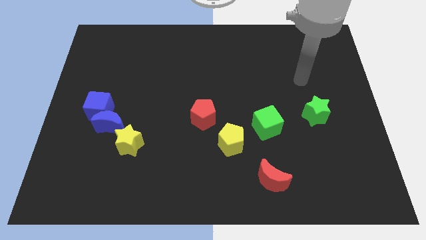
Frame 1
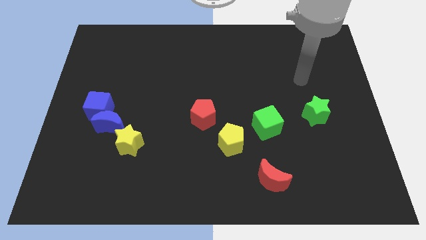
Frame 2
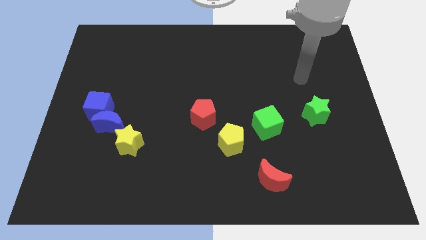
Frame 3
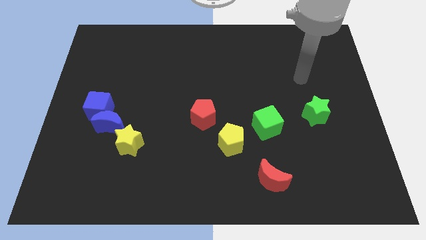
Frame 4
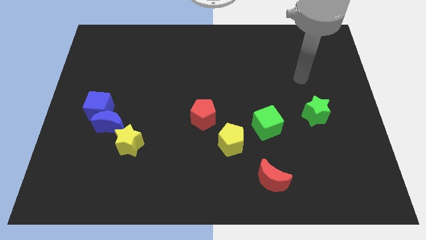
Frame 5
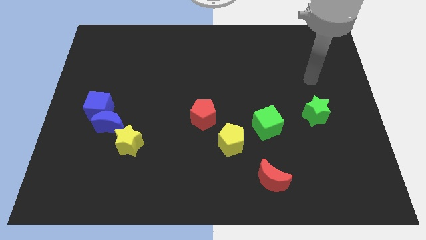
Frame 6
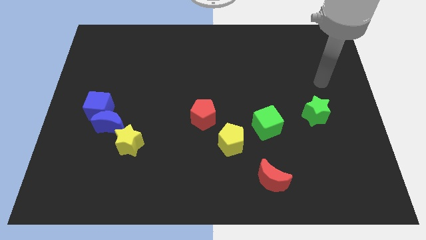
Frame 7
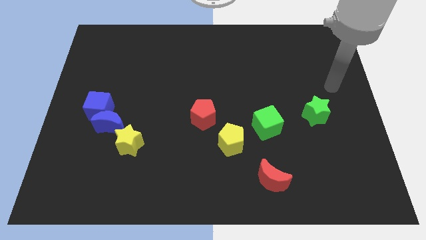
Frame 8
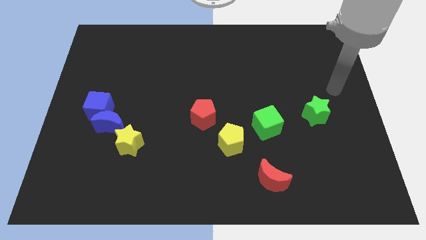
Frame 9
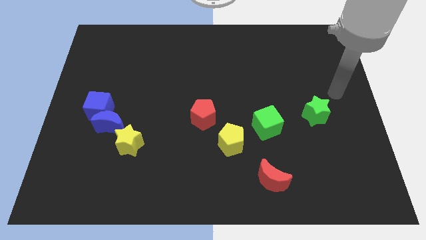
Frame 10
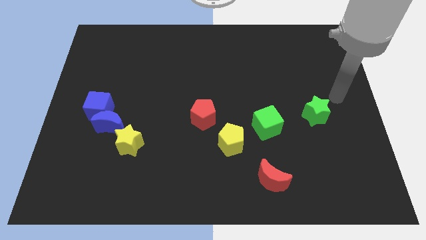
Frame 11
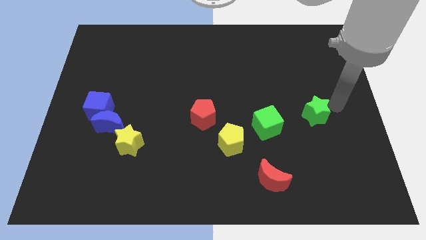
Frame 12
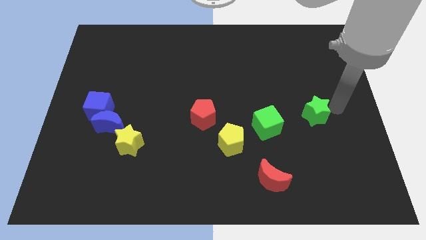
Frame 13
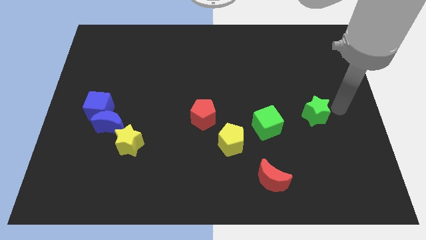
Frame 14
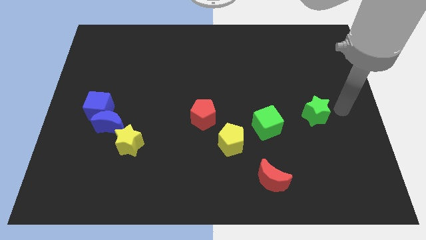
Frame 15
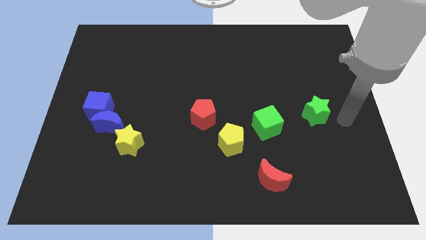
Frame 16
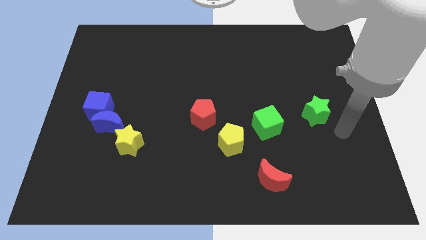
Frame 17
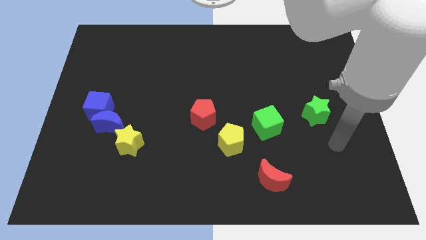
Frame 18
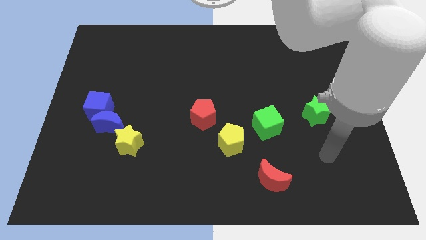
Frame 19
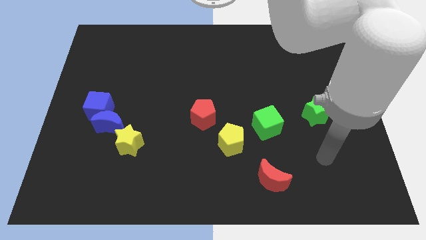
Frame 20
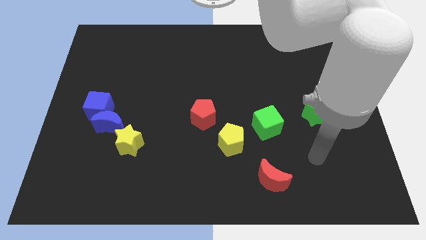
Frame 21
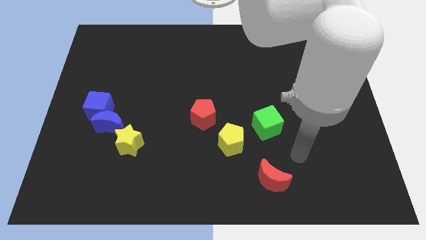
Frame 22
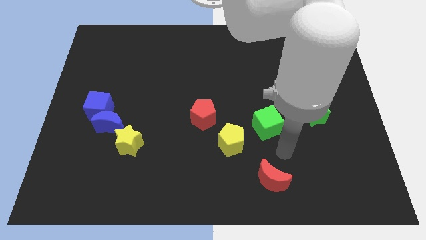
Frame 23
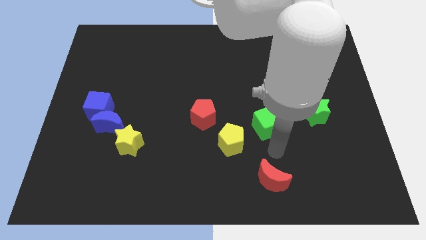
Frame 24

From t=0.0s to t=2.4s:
point your arm below the green cube

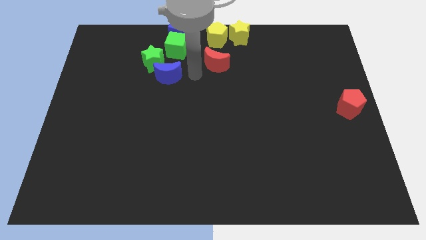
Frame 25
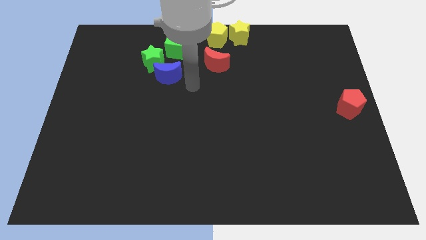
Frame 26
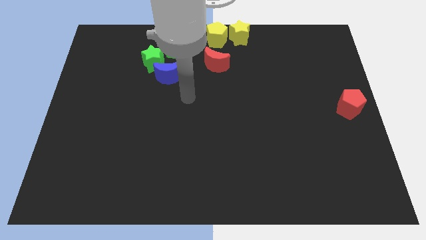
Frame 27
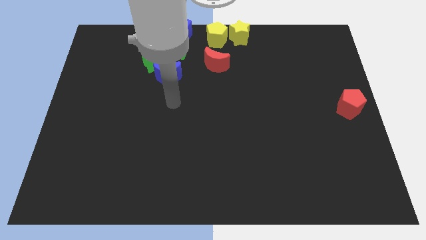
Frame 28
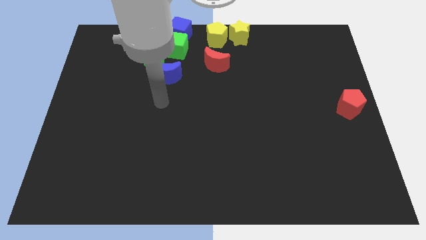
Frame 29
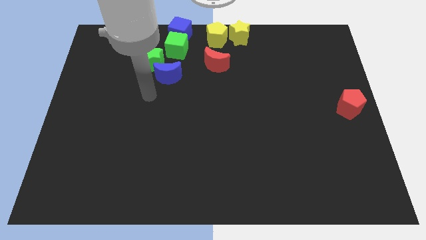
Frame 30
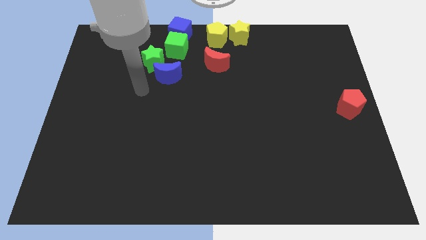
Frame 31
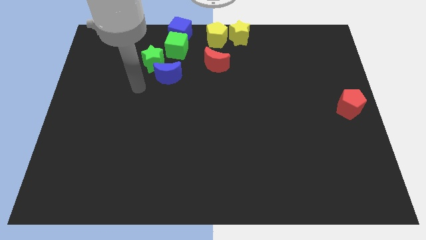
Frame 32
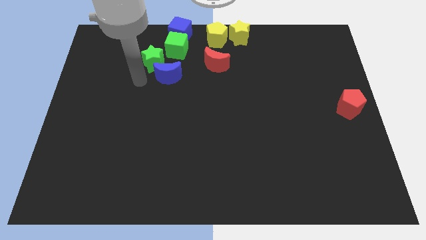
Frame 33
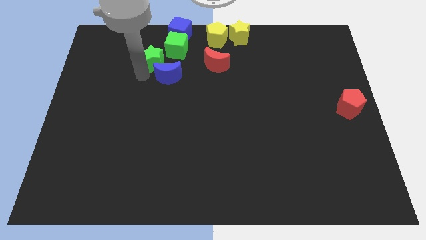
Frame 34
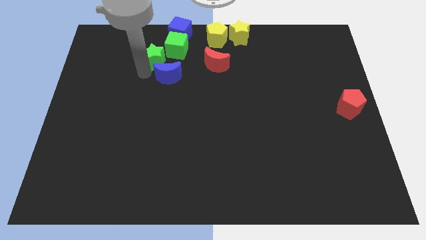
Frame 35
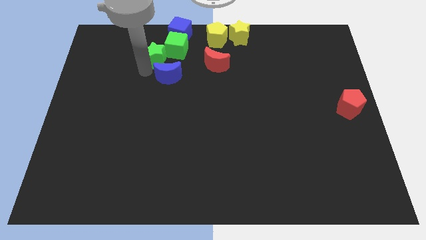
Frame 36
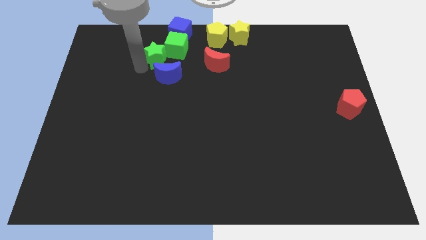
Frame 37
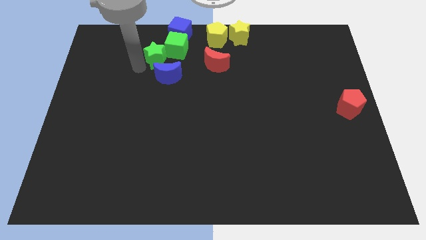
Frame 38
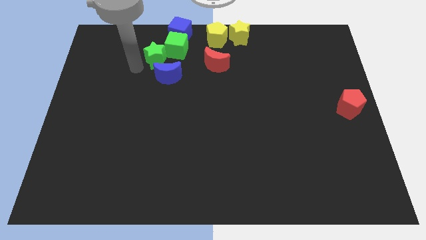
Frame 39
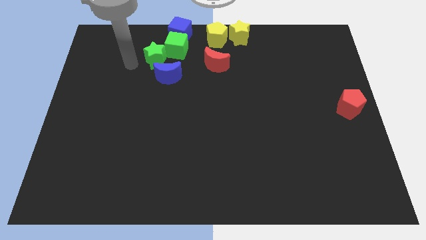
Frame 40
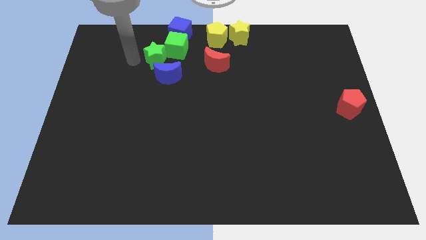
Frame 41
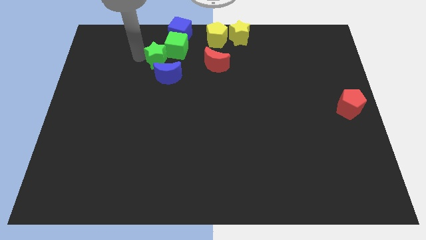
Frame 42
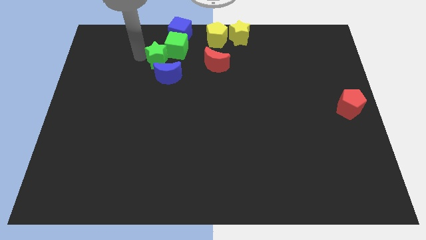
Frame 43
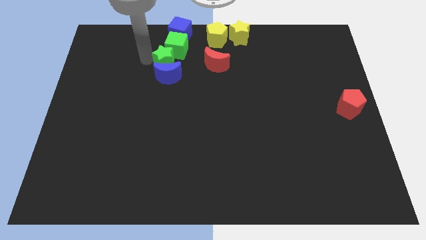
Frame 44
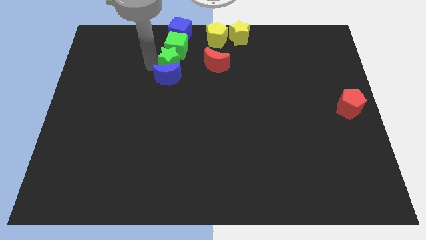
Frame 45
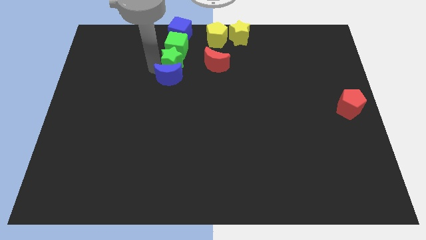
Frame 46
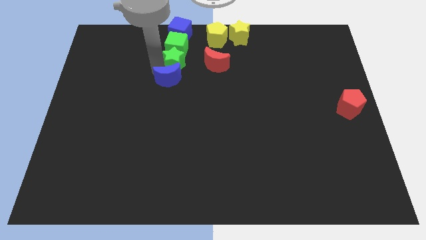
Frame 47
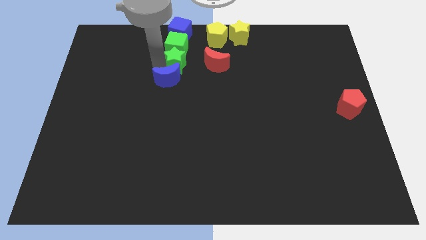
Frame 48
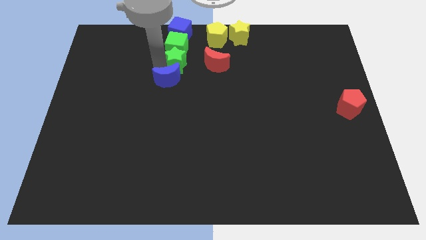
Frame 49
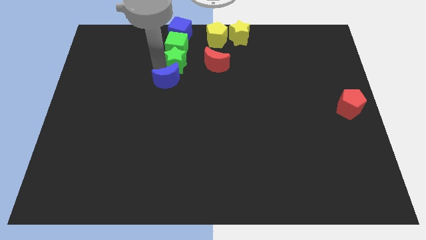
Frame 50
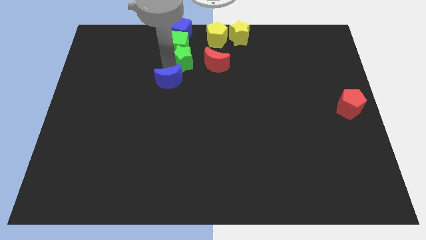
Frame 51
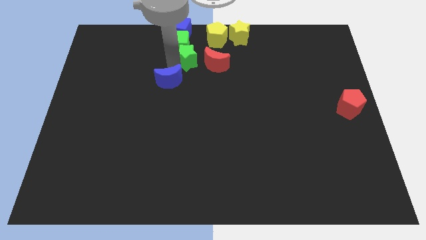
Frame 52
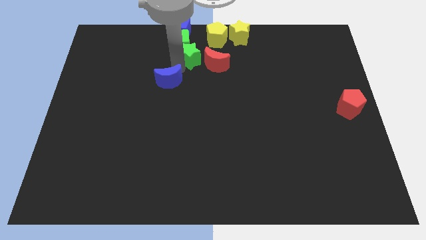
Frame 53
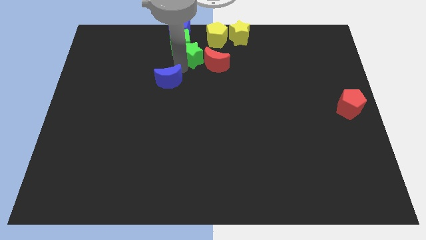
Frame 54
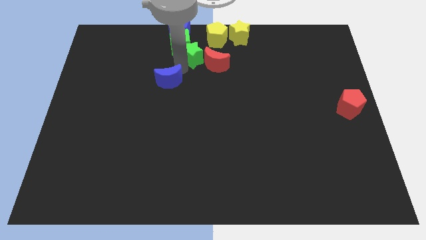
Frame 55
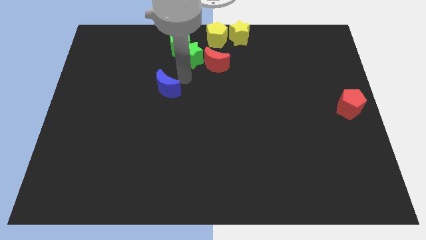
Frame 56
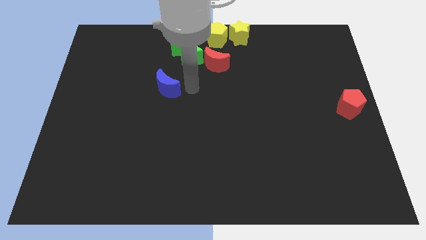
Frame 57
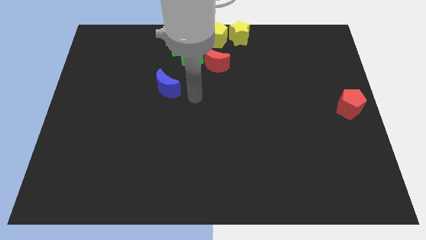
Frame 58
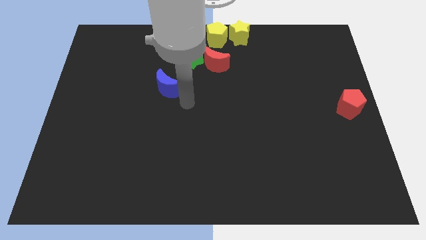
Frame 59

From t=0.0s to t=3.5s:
push the green star into the green cube

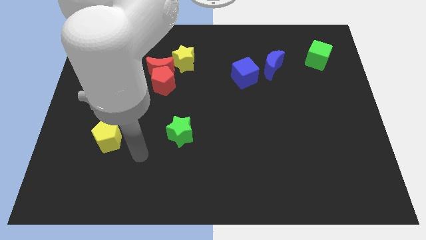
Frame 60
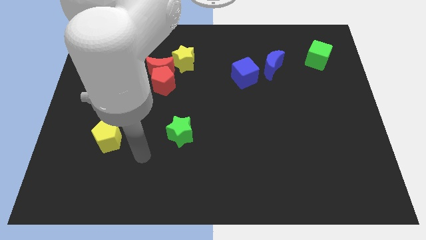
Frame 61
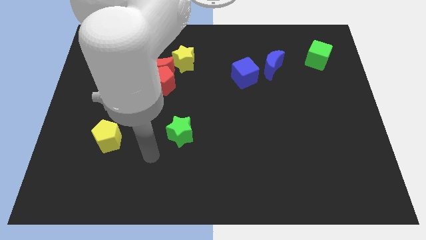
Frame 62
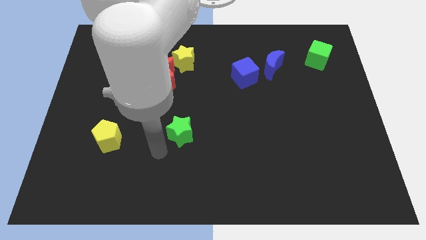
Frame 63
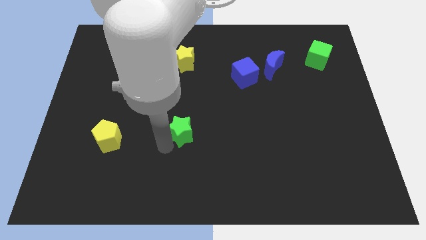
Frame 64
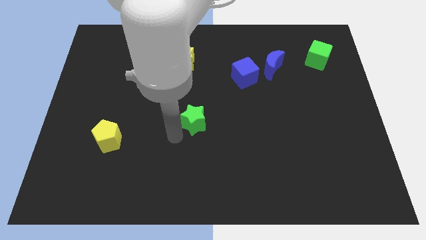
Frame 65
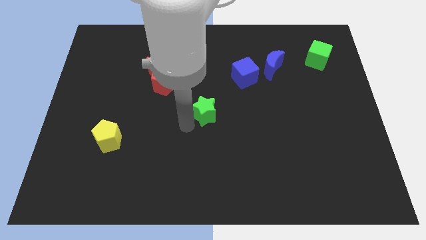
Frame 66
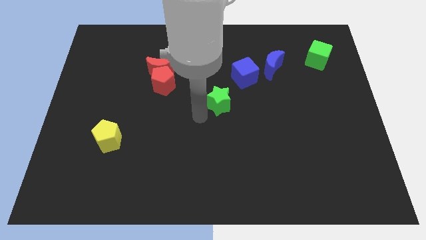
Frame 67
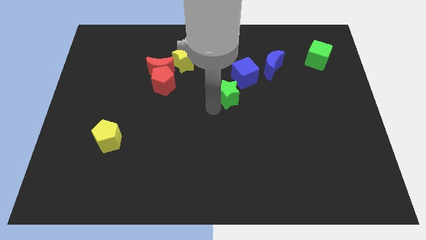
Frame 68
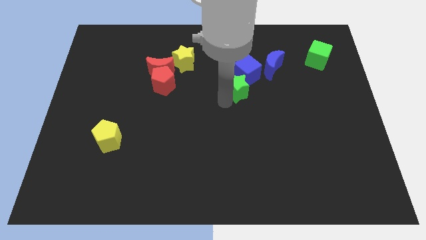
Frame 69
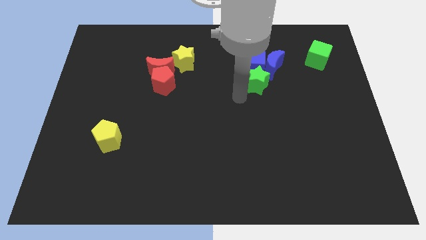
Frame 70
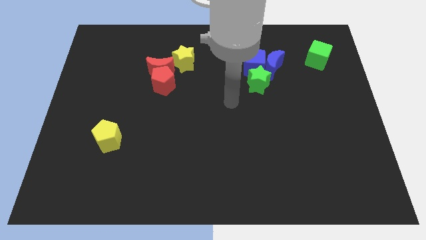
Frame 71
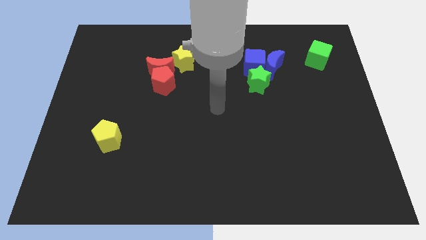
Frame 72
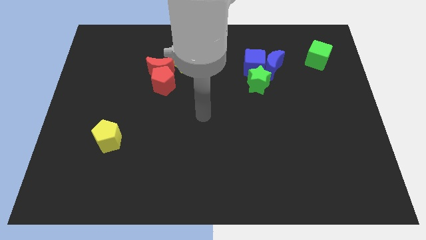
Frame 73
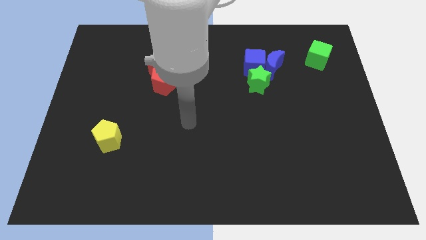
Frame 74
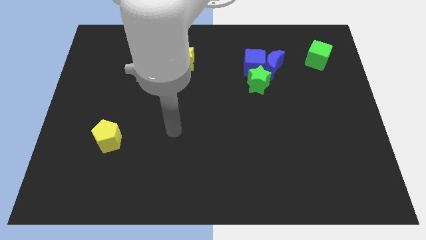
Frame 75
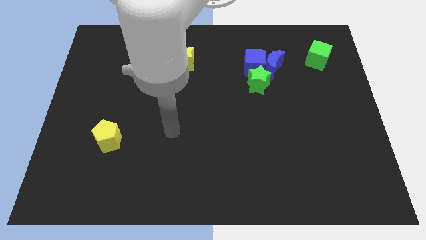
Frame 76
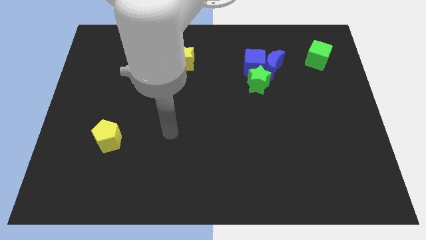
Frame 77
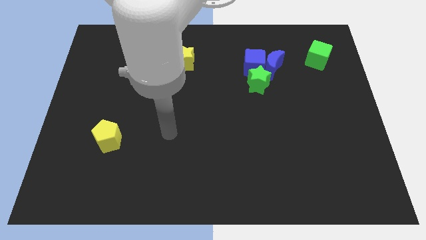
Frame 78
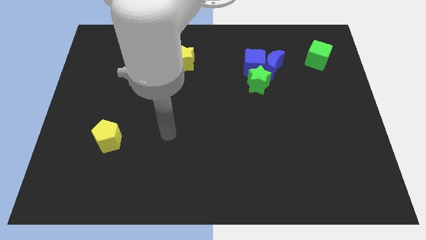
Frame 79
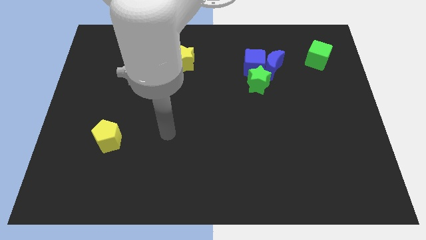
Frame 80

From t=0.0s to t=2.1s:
add green star into blue blocks

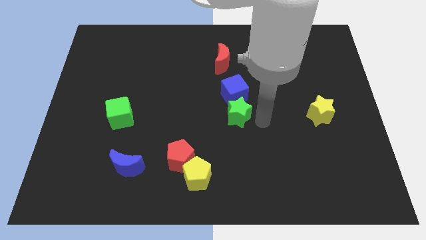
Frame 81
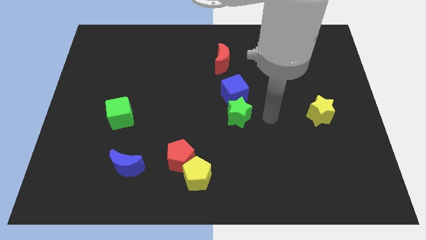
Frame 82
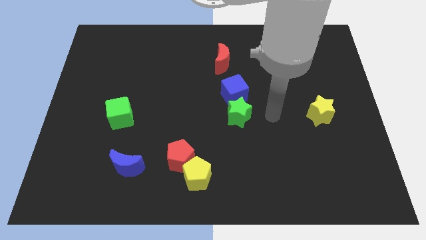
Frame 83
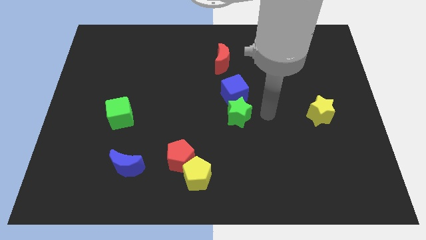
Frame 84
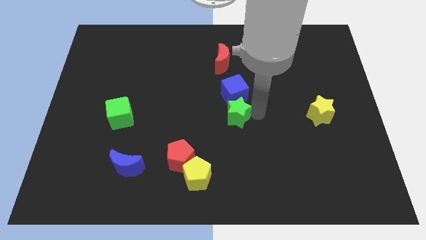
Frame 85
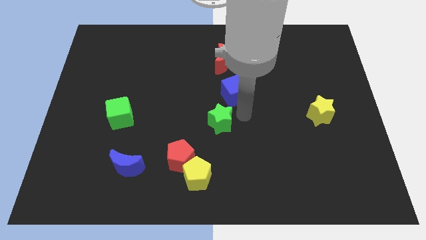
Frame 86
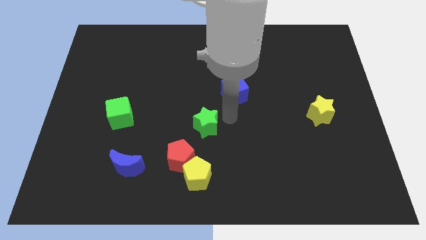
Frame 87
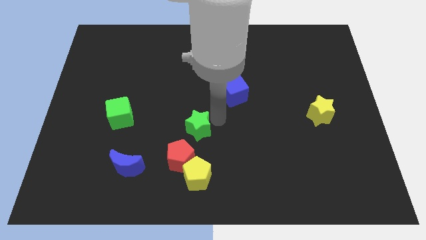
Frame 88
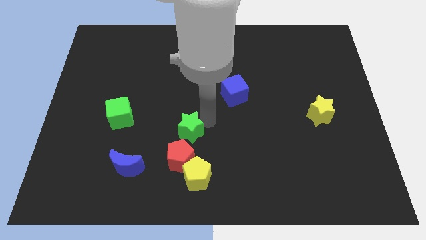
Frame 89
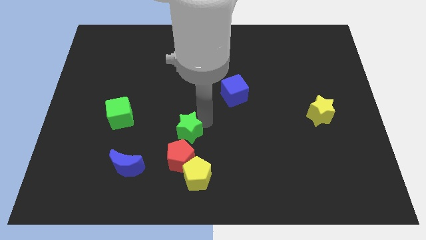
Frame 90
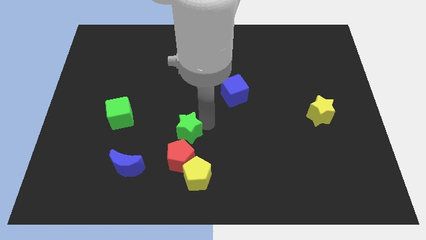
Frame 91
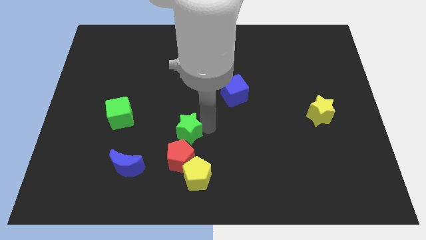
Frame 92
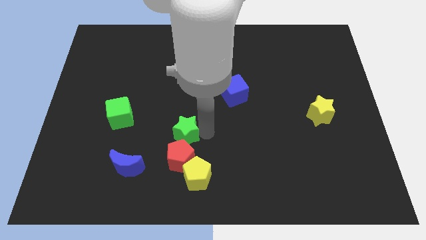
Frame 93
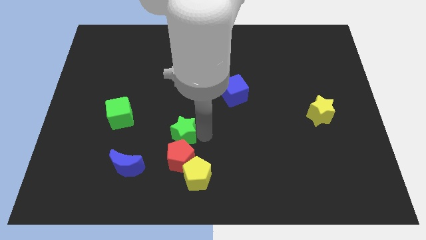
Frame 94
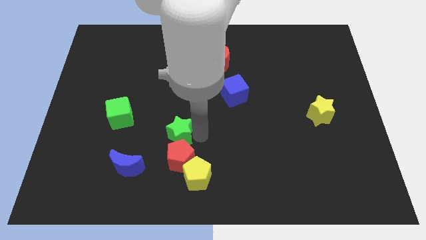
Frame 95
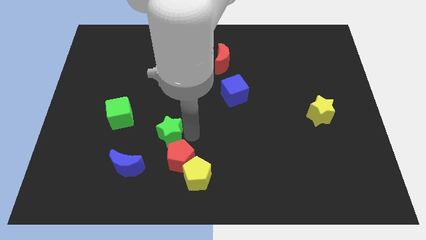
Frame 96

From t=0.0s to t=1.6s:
separate green star from blue cube
